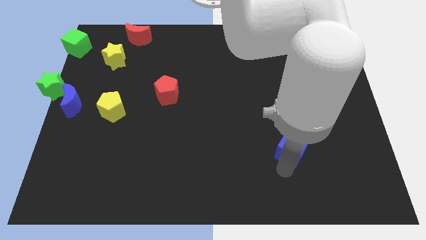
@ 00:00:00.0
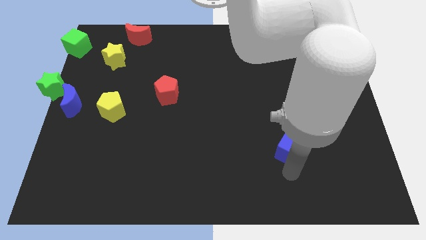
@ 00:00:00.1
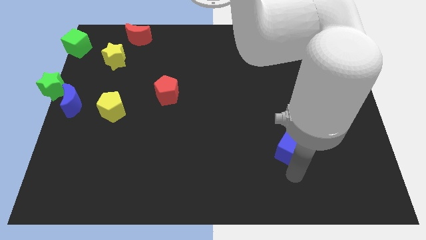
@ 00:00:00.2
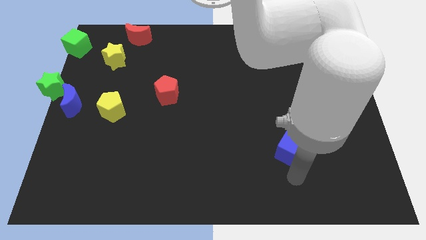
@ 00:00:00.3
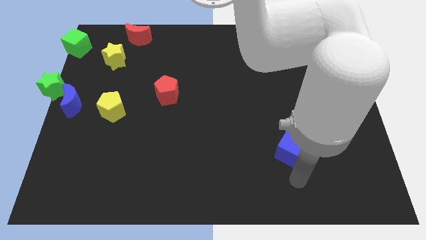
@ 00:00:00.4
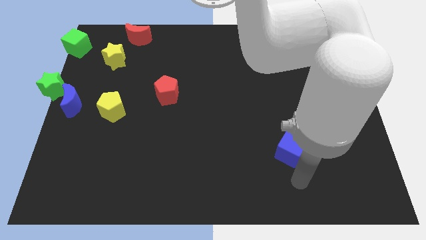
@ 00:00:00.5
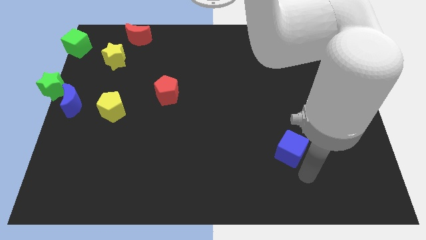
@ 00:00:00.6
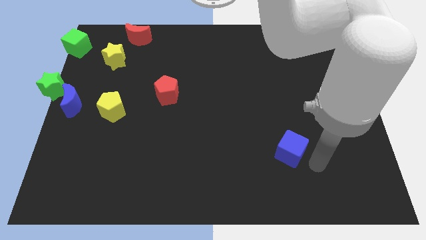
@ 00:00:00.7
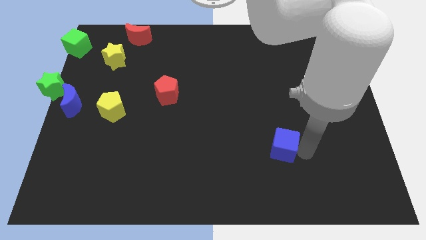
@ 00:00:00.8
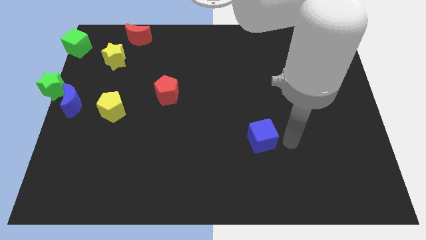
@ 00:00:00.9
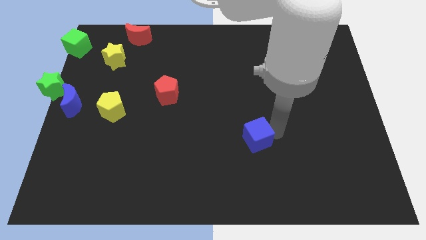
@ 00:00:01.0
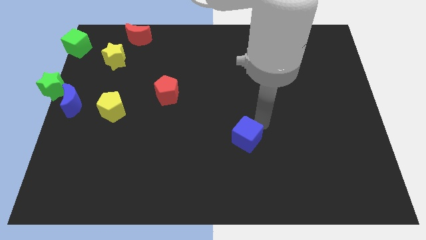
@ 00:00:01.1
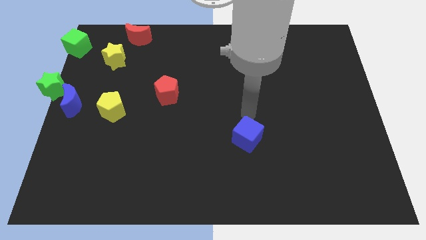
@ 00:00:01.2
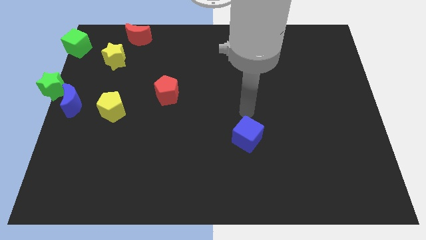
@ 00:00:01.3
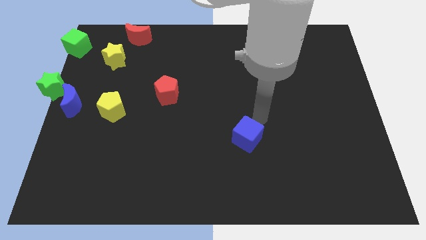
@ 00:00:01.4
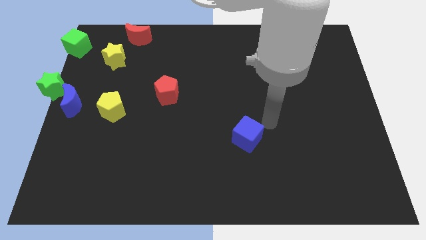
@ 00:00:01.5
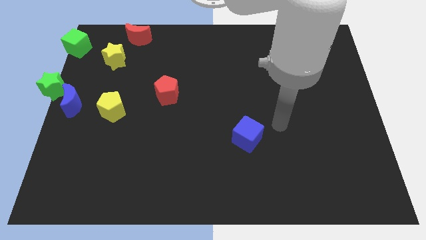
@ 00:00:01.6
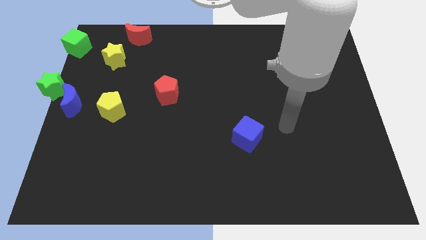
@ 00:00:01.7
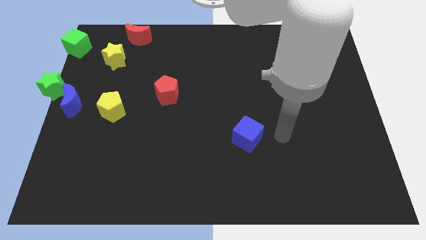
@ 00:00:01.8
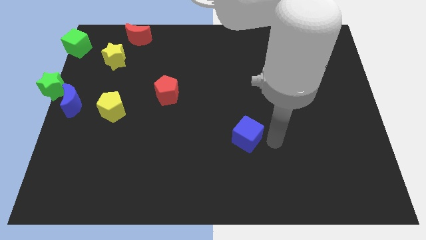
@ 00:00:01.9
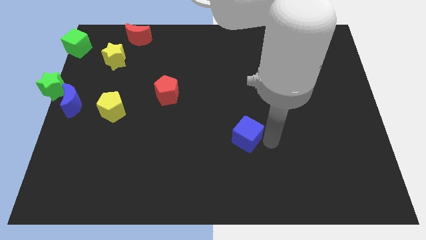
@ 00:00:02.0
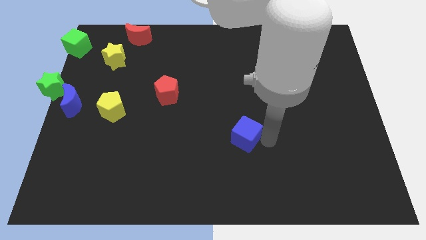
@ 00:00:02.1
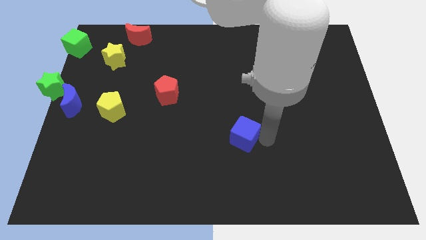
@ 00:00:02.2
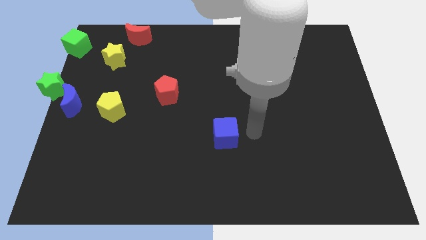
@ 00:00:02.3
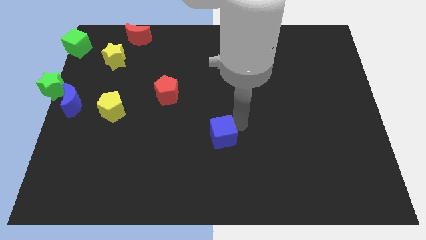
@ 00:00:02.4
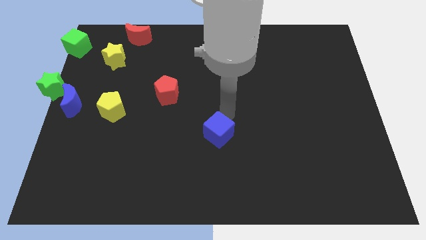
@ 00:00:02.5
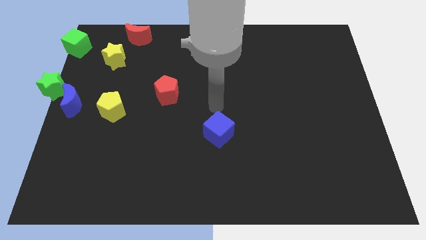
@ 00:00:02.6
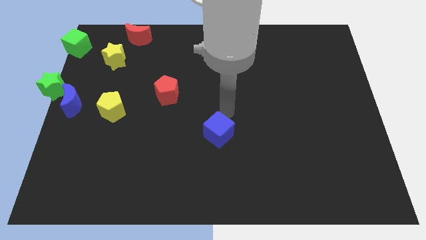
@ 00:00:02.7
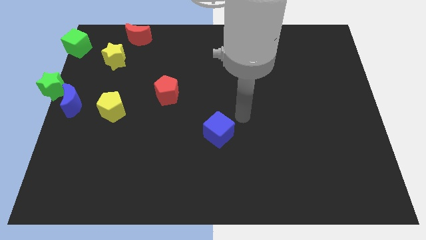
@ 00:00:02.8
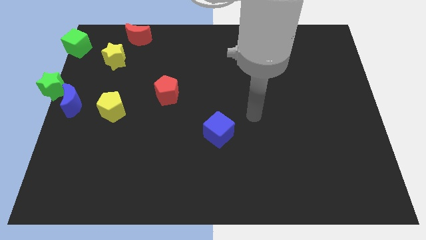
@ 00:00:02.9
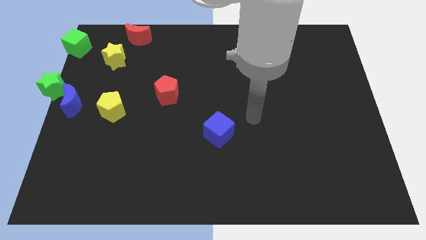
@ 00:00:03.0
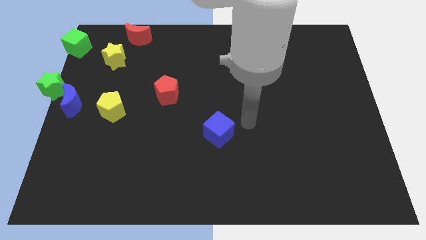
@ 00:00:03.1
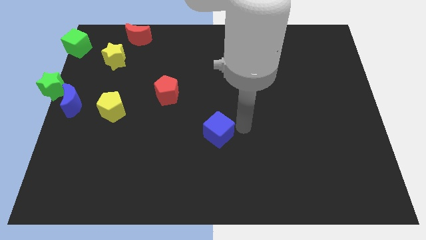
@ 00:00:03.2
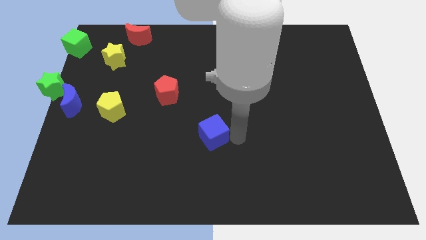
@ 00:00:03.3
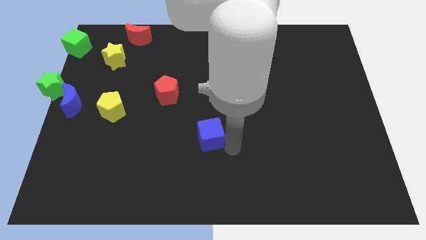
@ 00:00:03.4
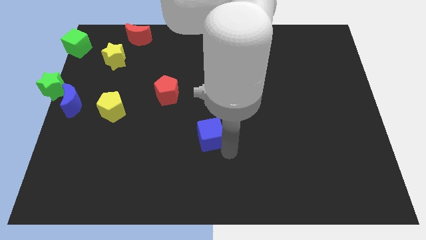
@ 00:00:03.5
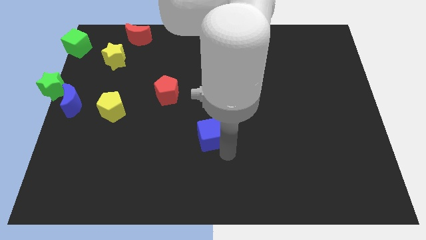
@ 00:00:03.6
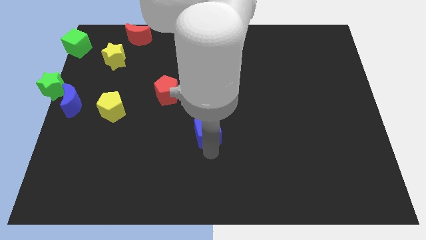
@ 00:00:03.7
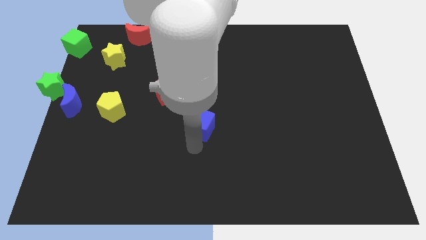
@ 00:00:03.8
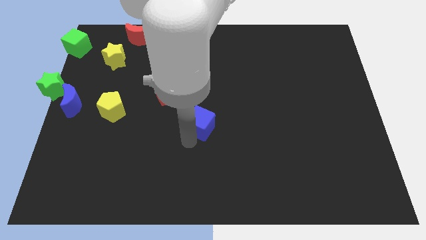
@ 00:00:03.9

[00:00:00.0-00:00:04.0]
move blue cube at the center of the board

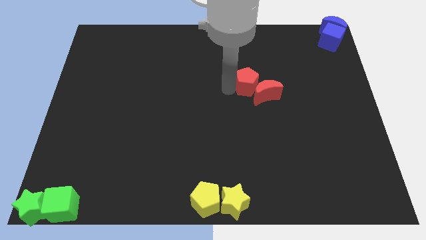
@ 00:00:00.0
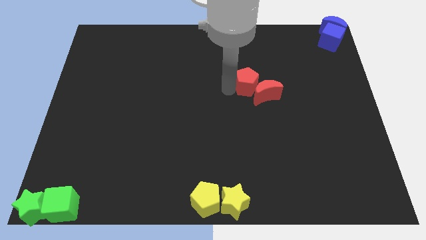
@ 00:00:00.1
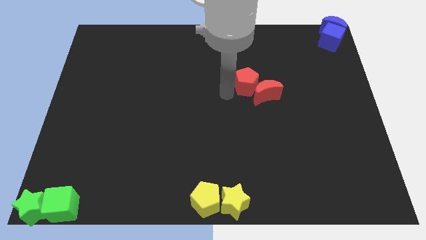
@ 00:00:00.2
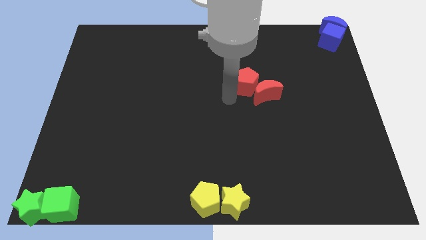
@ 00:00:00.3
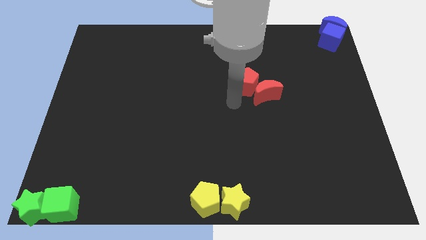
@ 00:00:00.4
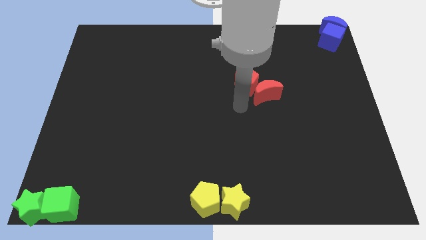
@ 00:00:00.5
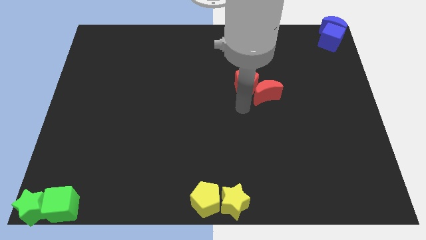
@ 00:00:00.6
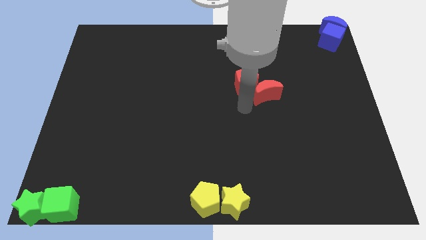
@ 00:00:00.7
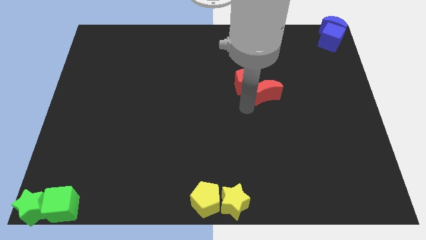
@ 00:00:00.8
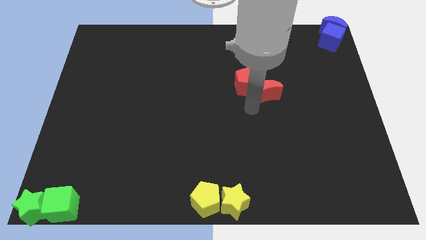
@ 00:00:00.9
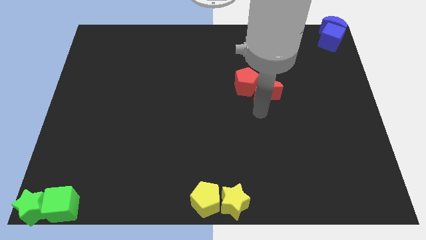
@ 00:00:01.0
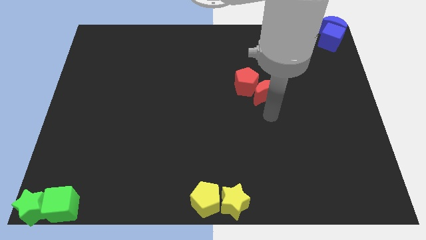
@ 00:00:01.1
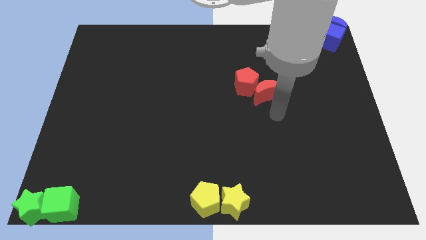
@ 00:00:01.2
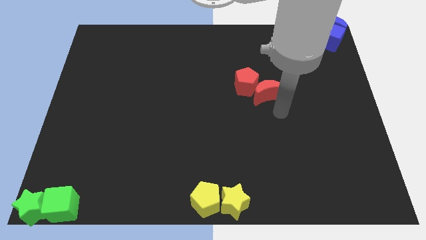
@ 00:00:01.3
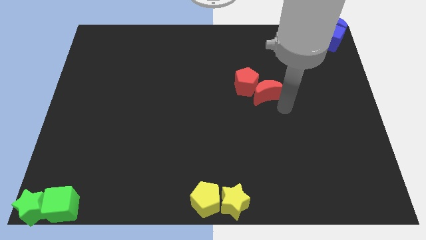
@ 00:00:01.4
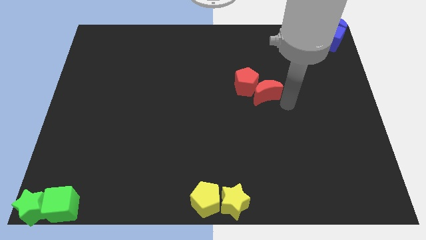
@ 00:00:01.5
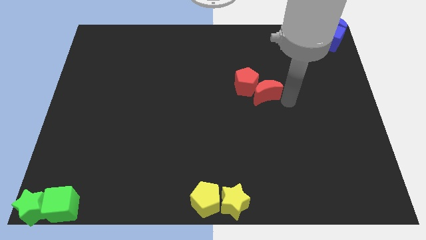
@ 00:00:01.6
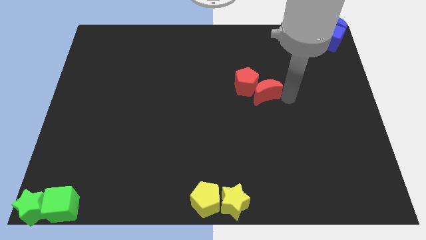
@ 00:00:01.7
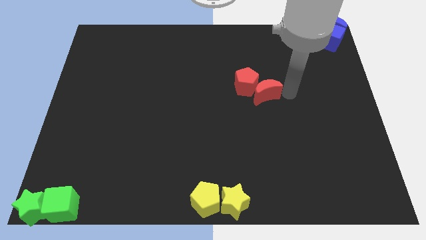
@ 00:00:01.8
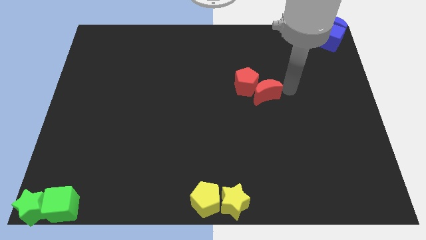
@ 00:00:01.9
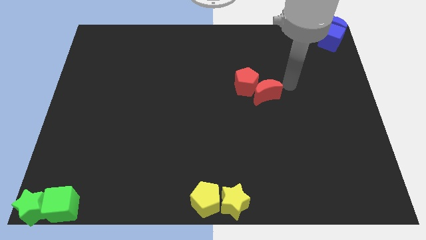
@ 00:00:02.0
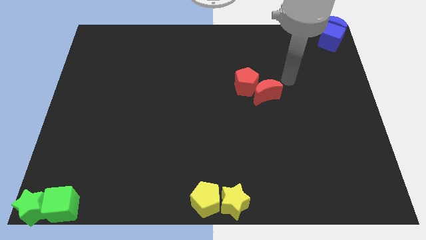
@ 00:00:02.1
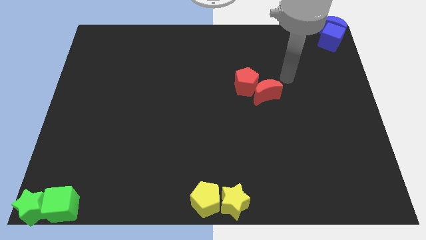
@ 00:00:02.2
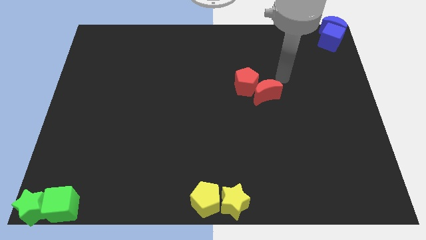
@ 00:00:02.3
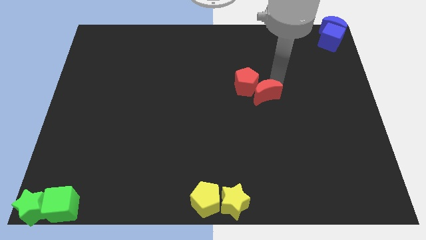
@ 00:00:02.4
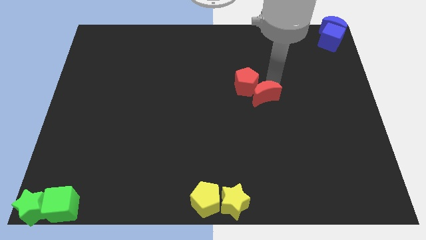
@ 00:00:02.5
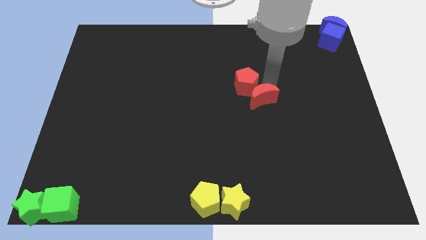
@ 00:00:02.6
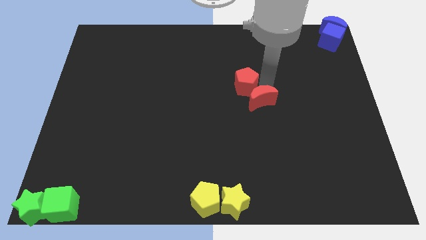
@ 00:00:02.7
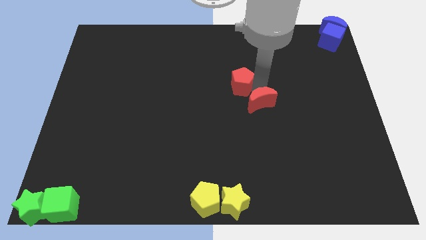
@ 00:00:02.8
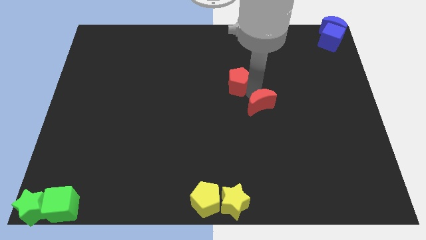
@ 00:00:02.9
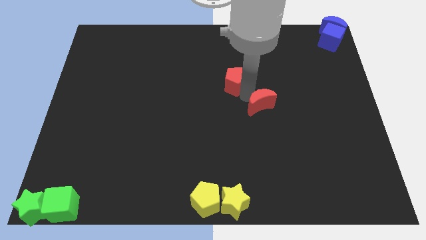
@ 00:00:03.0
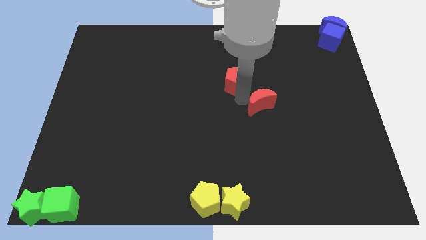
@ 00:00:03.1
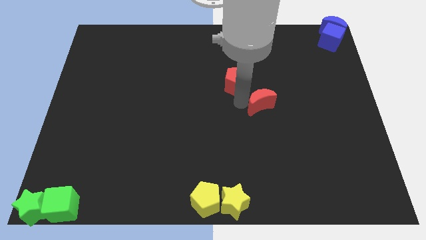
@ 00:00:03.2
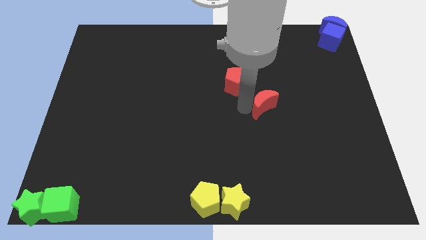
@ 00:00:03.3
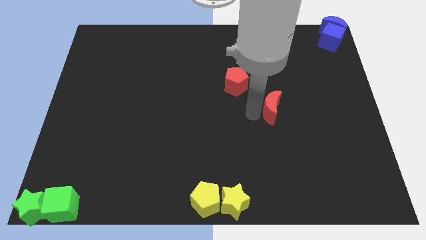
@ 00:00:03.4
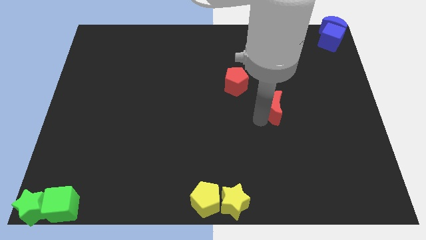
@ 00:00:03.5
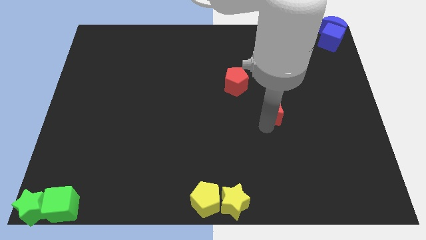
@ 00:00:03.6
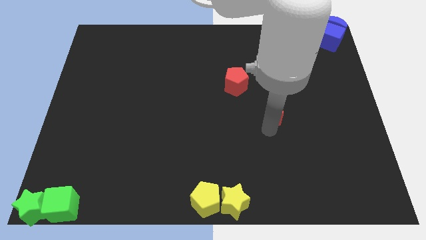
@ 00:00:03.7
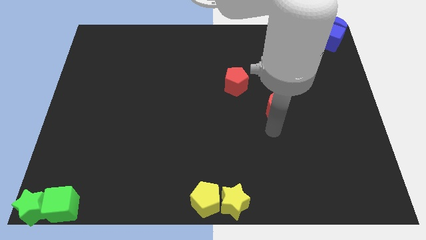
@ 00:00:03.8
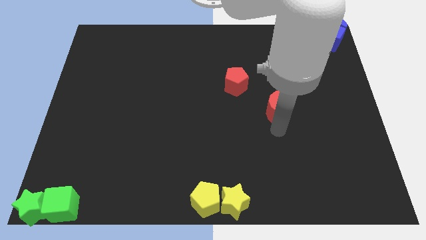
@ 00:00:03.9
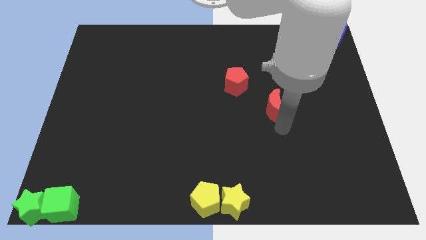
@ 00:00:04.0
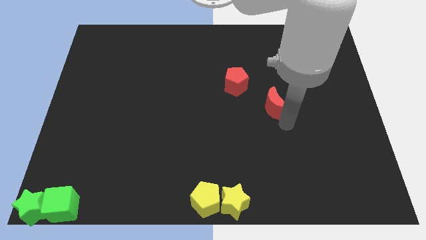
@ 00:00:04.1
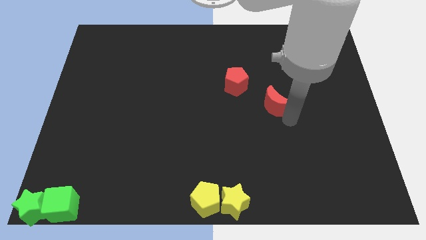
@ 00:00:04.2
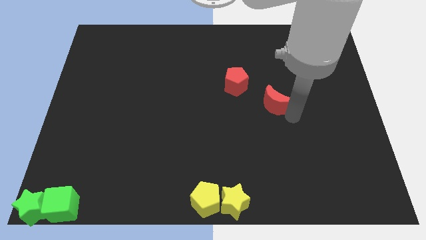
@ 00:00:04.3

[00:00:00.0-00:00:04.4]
separate the red moon from the red pentagon

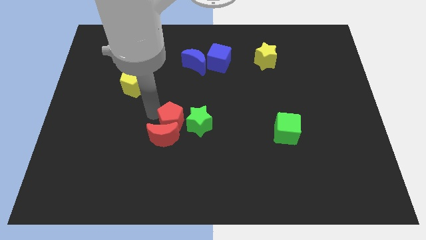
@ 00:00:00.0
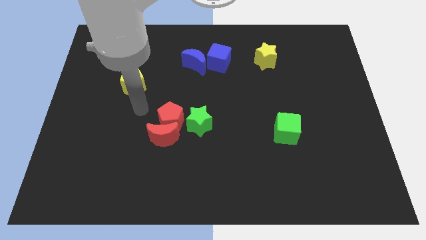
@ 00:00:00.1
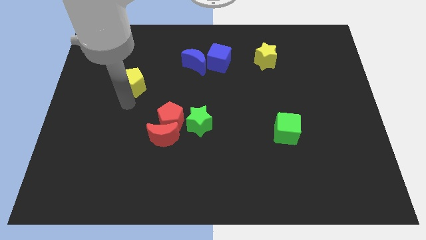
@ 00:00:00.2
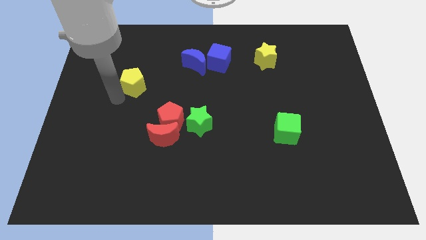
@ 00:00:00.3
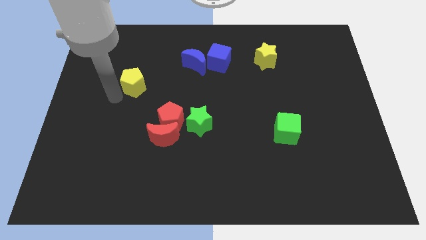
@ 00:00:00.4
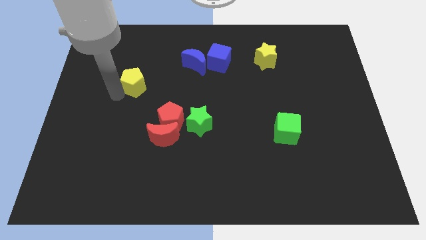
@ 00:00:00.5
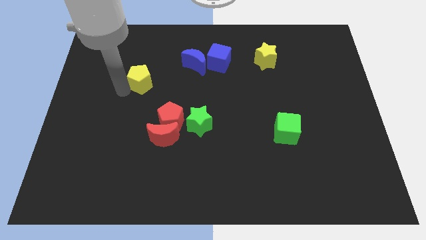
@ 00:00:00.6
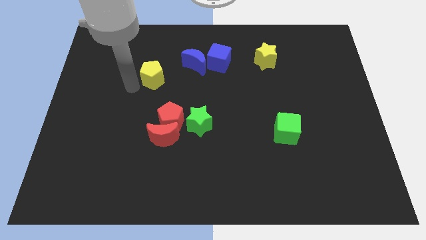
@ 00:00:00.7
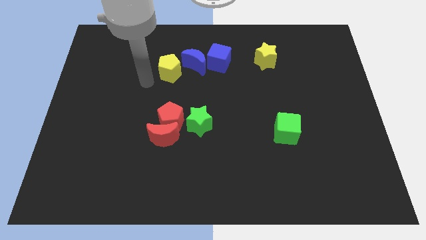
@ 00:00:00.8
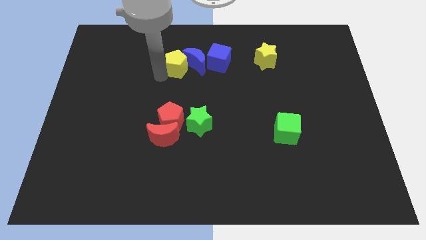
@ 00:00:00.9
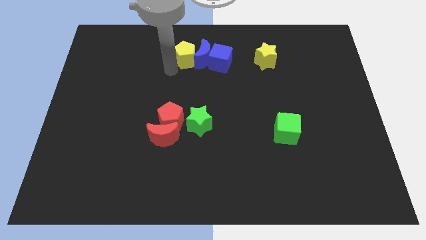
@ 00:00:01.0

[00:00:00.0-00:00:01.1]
push the yellow pentagon into the left side of the blue moon
